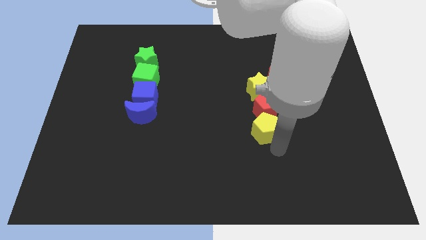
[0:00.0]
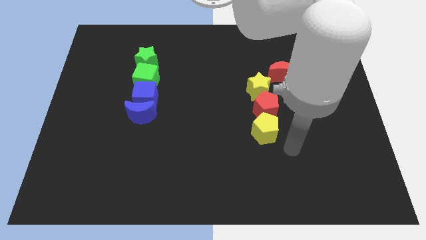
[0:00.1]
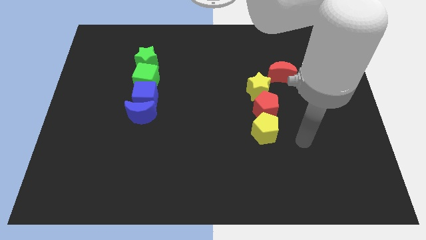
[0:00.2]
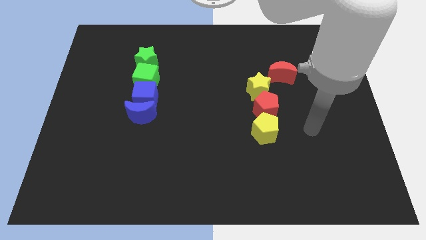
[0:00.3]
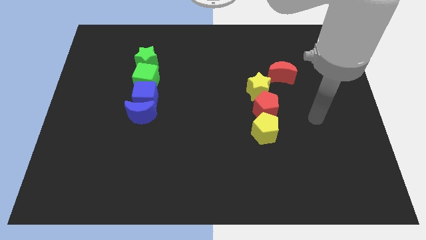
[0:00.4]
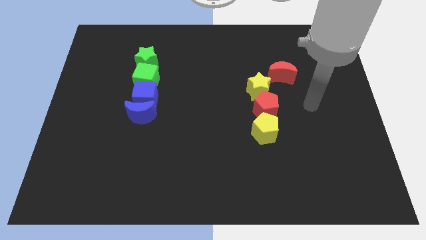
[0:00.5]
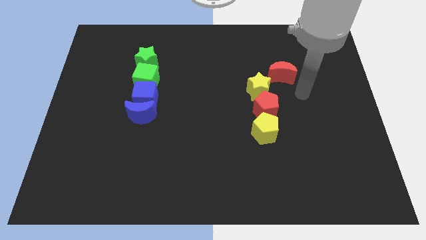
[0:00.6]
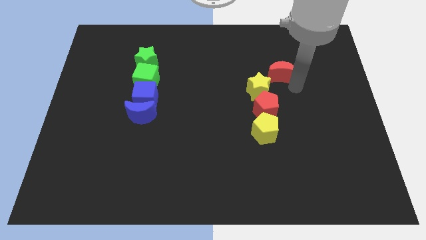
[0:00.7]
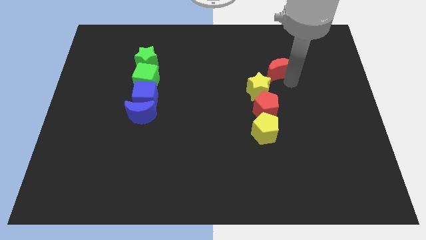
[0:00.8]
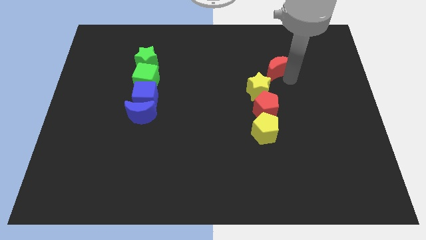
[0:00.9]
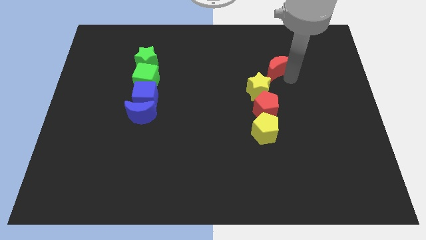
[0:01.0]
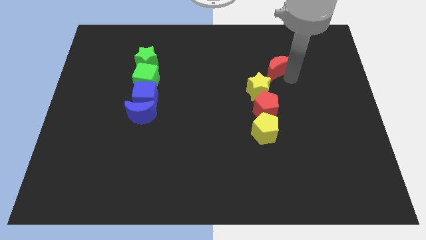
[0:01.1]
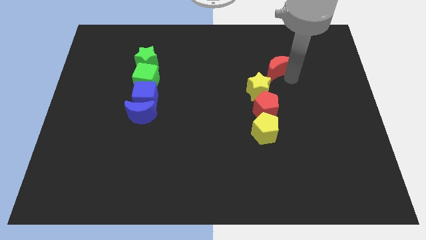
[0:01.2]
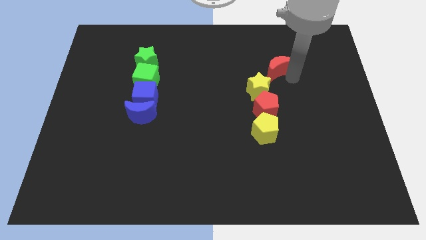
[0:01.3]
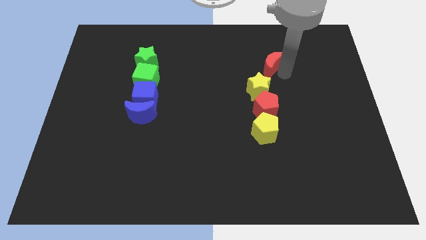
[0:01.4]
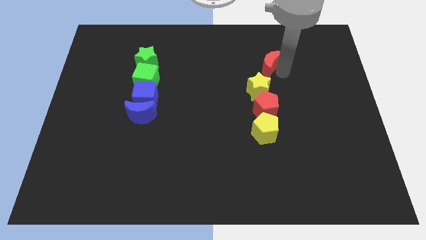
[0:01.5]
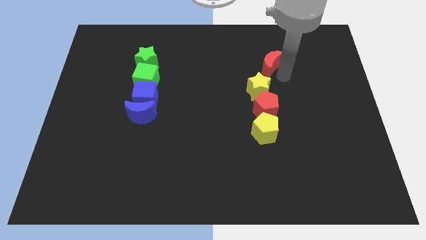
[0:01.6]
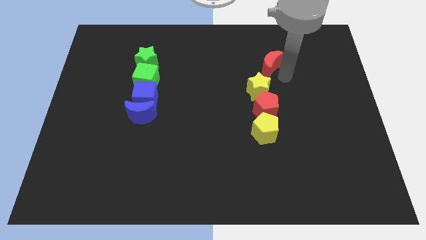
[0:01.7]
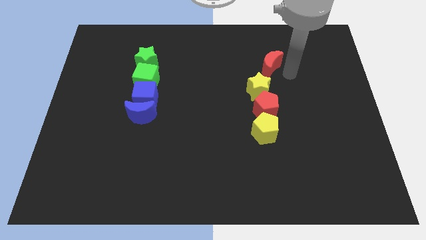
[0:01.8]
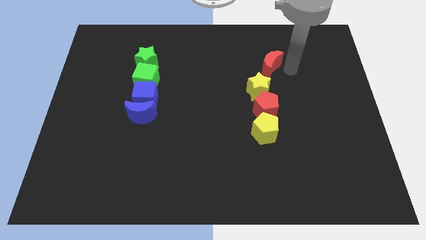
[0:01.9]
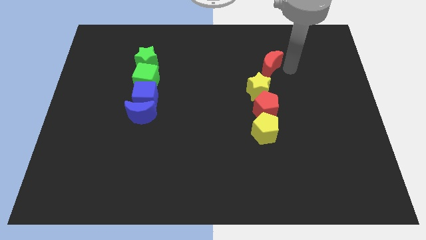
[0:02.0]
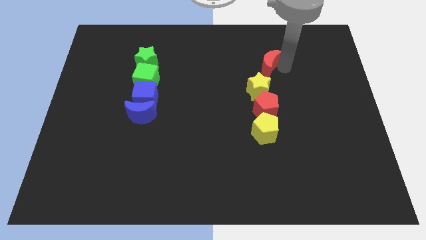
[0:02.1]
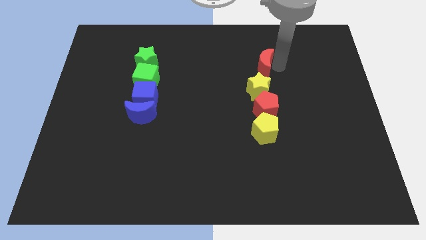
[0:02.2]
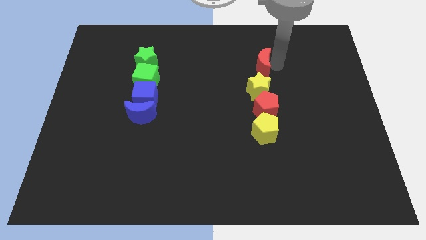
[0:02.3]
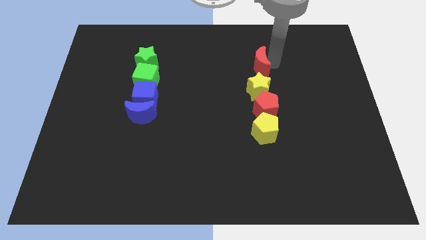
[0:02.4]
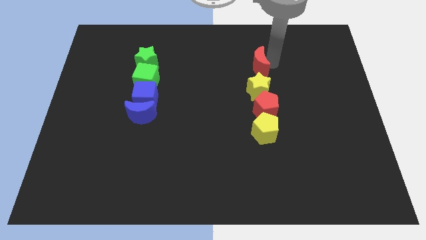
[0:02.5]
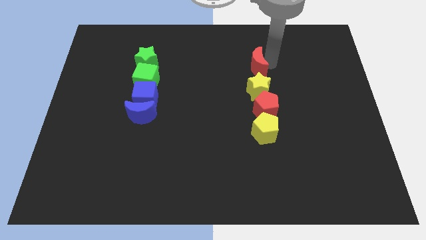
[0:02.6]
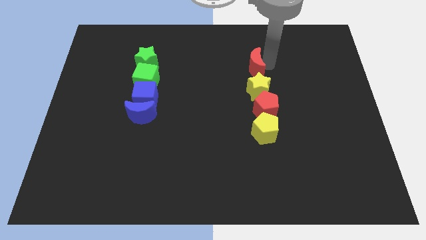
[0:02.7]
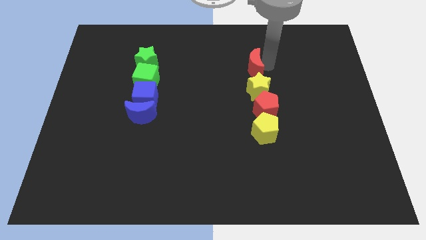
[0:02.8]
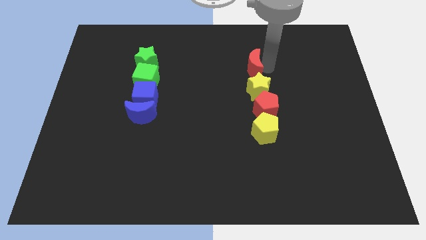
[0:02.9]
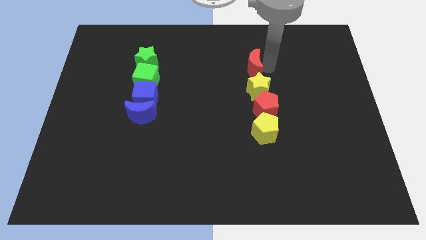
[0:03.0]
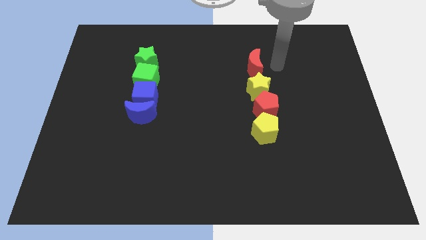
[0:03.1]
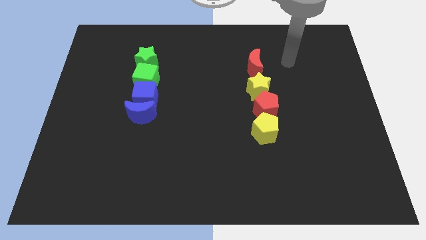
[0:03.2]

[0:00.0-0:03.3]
slide the red moon to the top of the yellow star

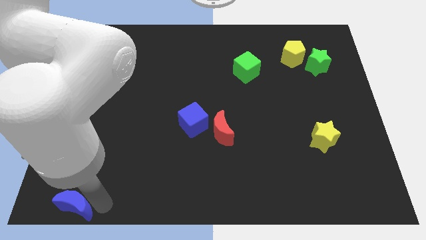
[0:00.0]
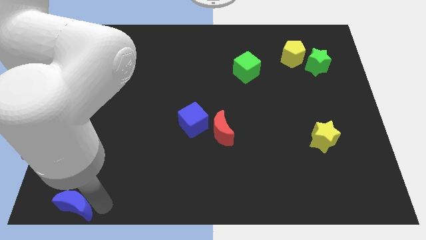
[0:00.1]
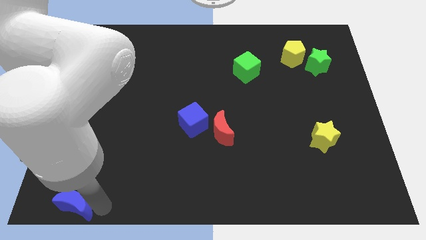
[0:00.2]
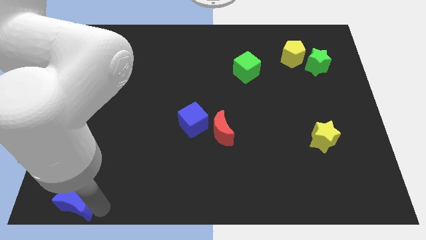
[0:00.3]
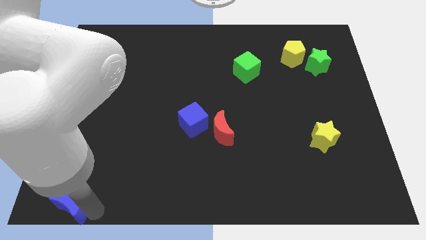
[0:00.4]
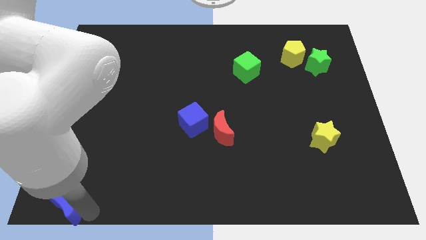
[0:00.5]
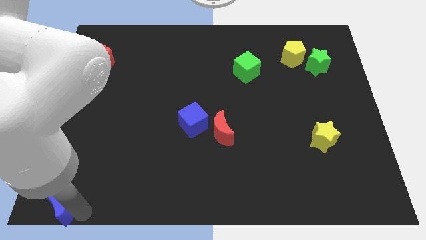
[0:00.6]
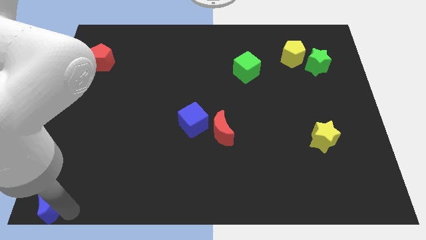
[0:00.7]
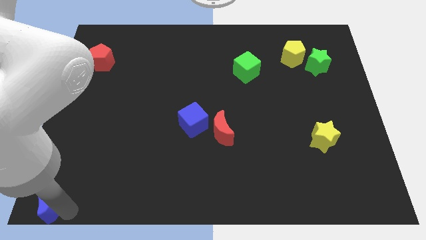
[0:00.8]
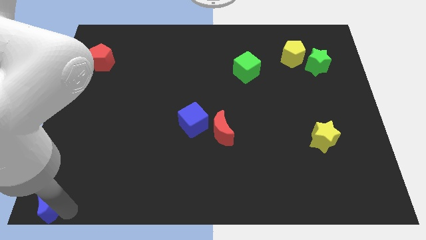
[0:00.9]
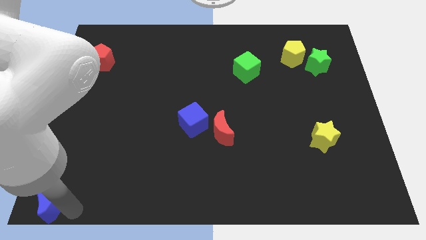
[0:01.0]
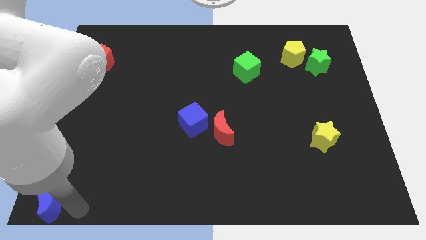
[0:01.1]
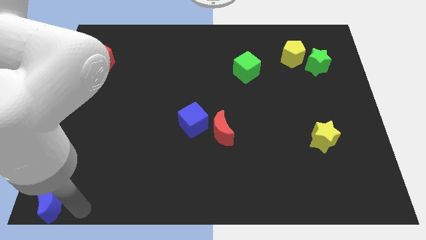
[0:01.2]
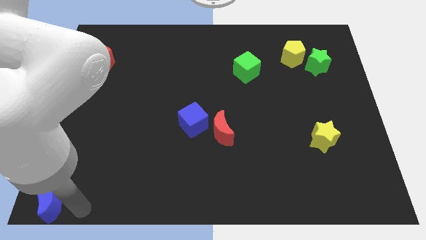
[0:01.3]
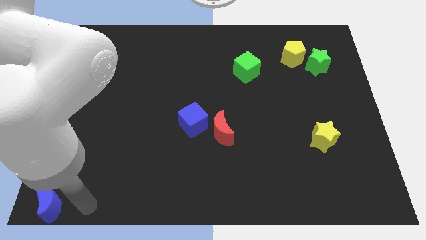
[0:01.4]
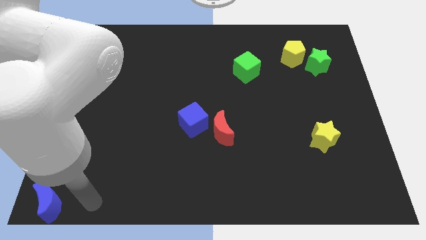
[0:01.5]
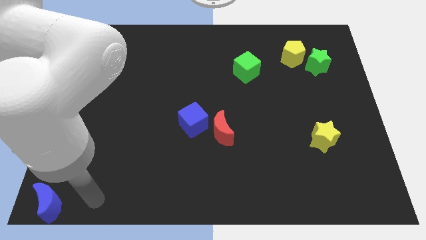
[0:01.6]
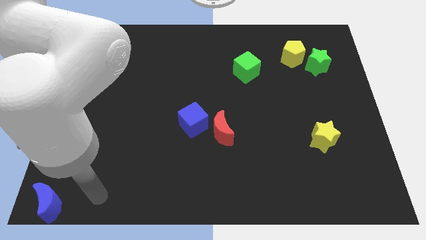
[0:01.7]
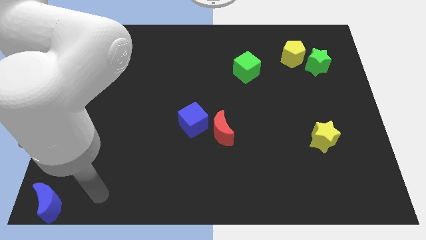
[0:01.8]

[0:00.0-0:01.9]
push blue moon to the bottom left corner of board

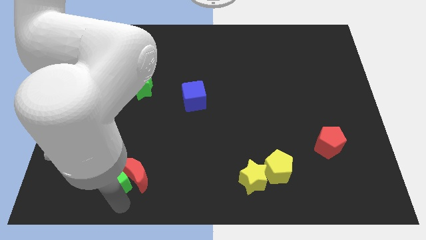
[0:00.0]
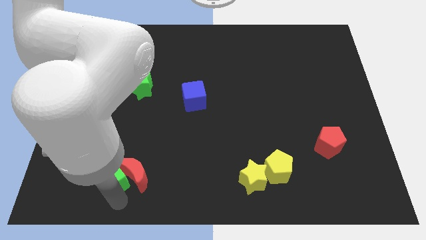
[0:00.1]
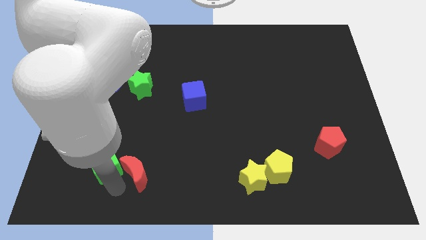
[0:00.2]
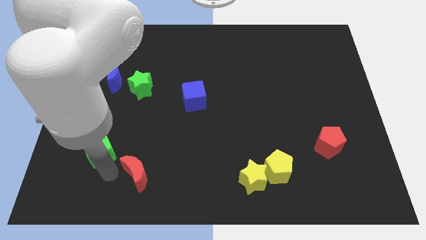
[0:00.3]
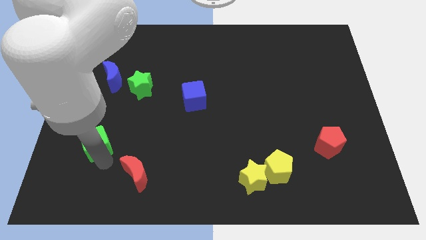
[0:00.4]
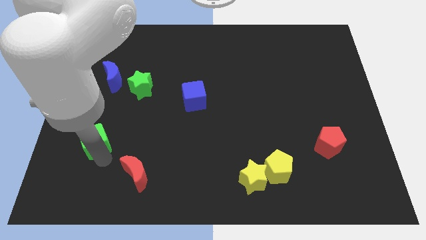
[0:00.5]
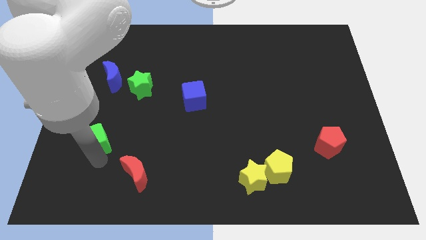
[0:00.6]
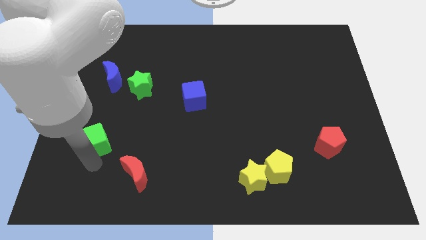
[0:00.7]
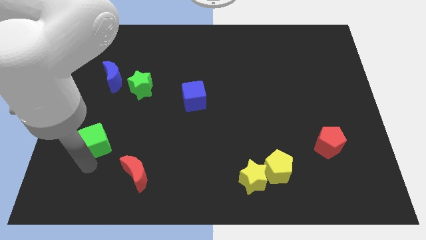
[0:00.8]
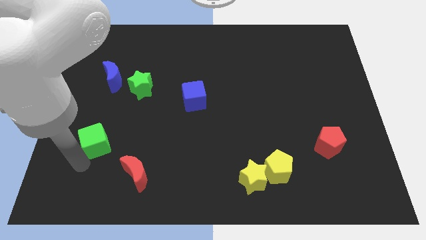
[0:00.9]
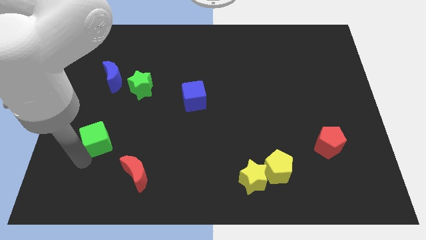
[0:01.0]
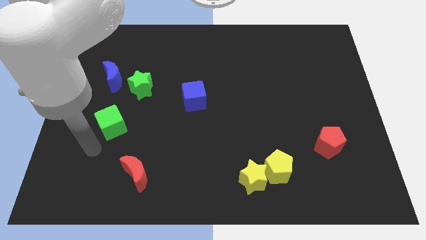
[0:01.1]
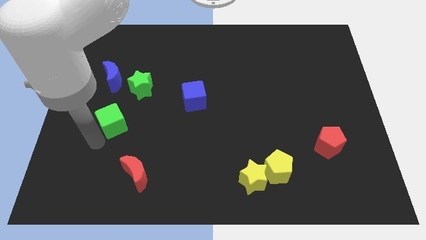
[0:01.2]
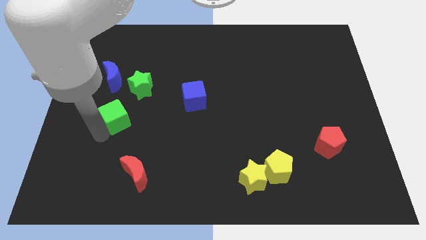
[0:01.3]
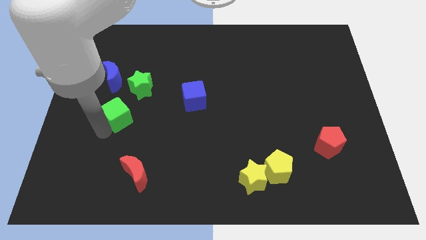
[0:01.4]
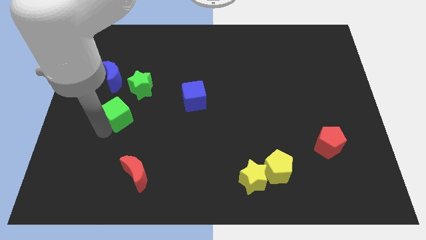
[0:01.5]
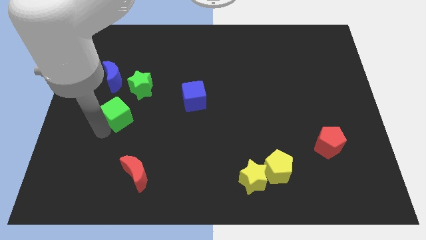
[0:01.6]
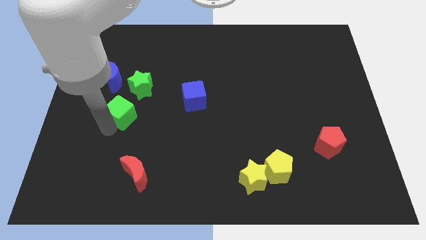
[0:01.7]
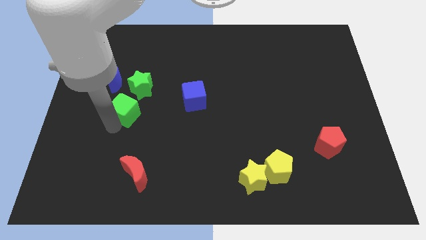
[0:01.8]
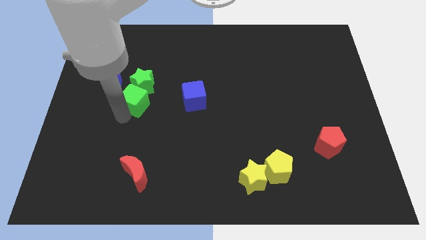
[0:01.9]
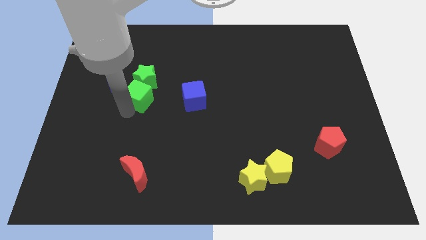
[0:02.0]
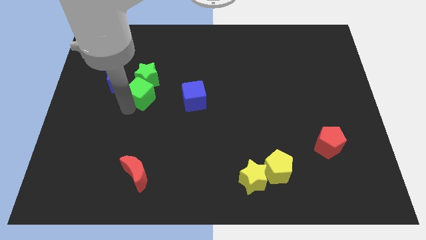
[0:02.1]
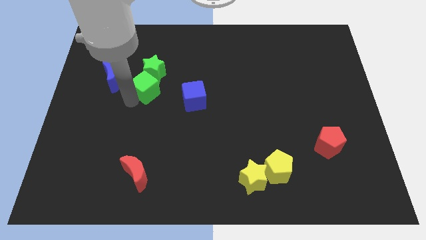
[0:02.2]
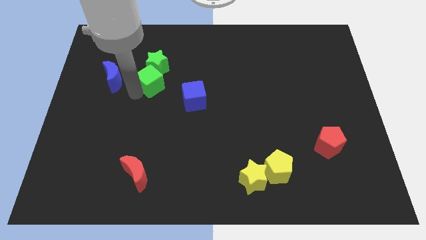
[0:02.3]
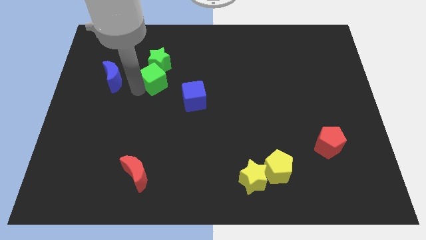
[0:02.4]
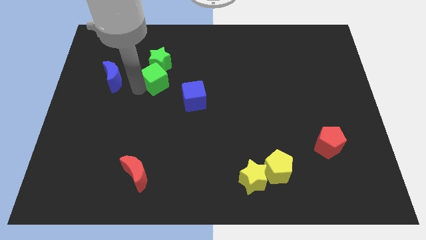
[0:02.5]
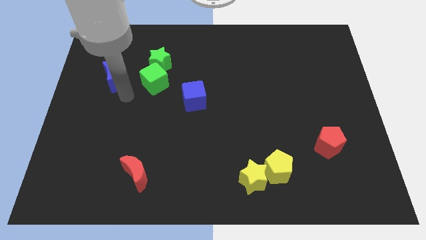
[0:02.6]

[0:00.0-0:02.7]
place green cube below green star

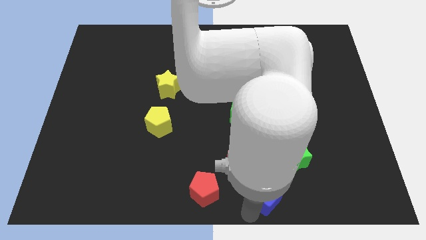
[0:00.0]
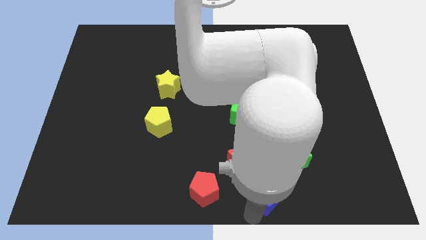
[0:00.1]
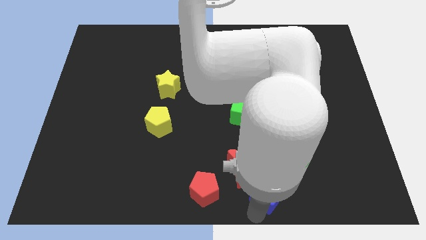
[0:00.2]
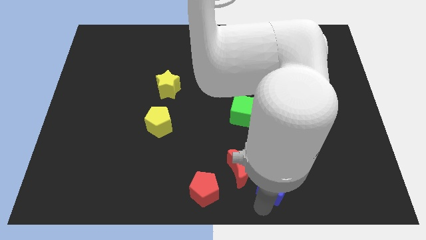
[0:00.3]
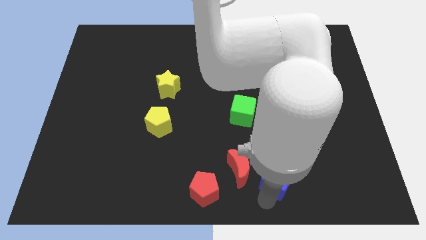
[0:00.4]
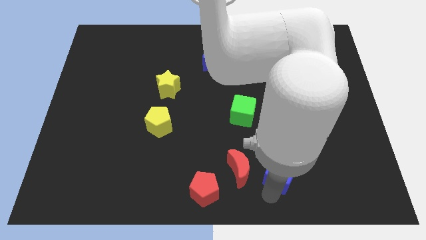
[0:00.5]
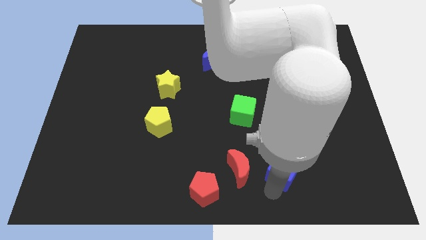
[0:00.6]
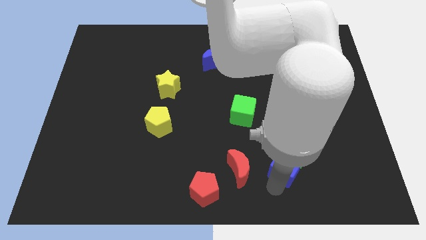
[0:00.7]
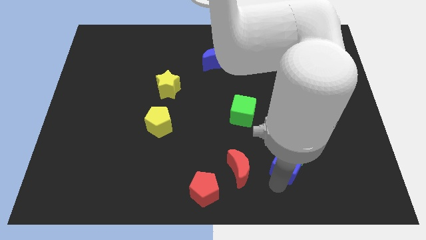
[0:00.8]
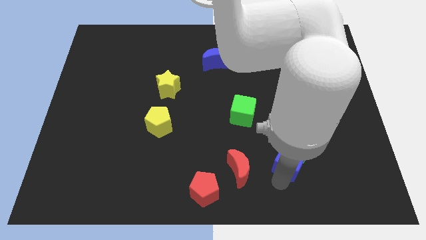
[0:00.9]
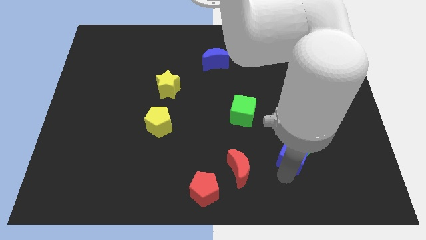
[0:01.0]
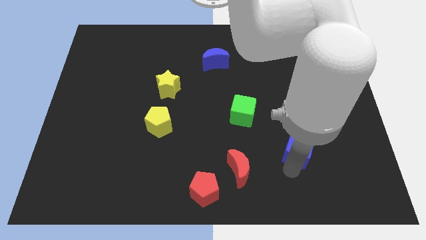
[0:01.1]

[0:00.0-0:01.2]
place blue cube towards green star
